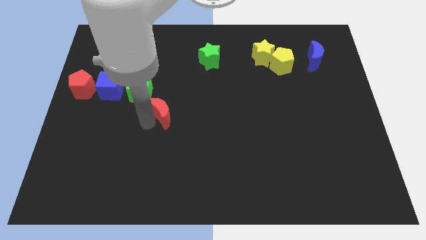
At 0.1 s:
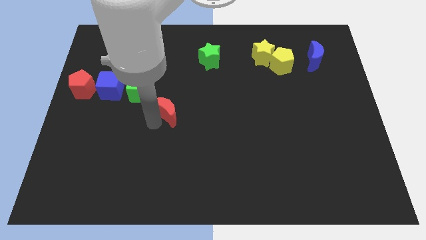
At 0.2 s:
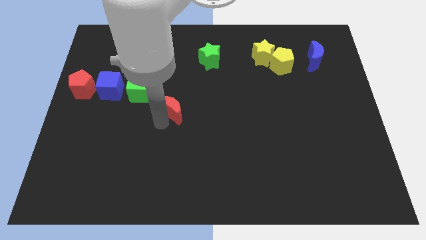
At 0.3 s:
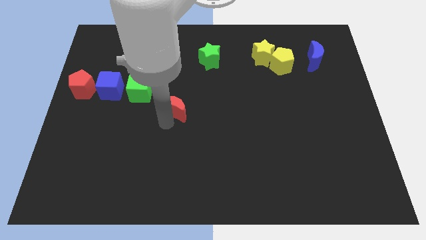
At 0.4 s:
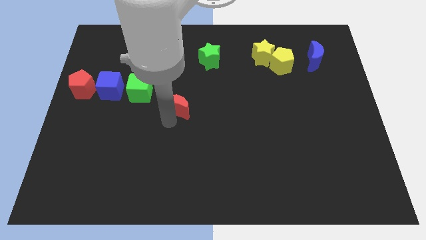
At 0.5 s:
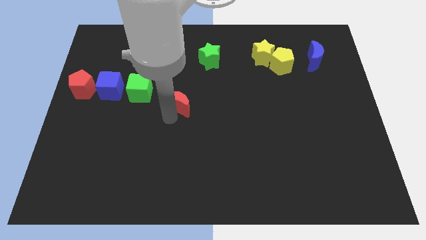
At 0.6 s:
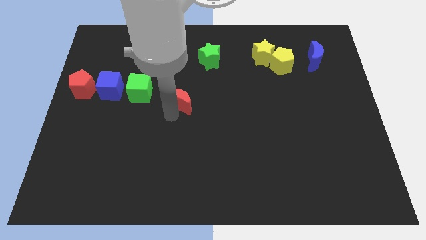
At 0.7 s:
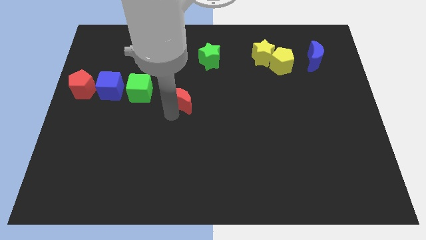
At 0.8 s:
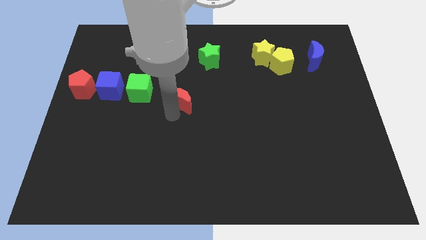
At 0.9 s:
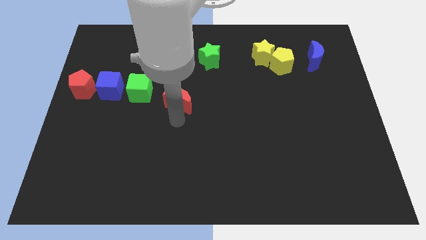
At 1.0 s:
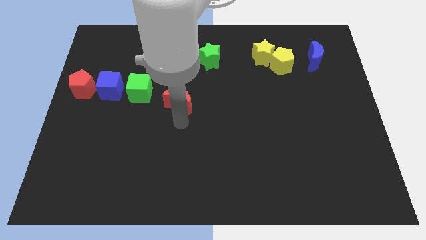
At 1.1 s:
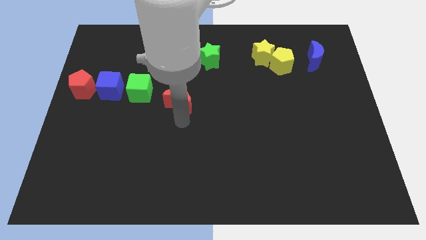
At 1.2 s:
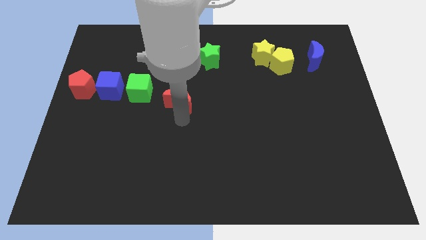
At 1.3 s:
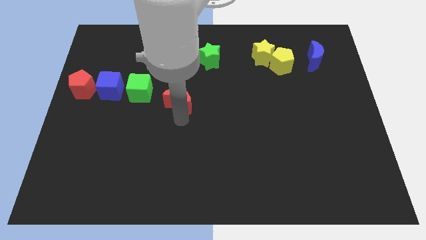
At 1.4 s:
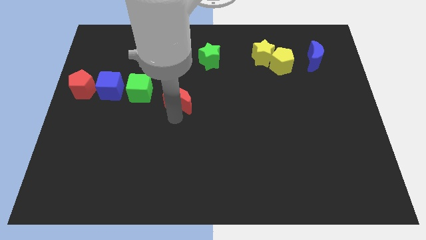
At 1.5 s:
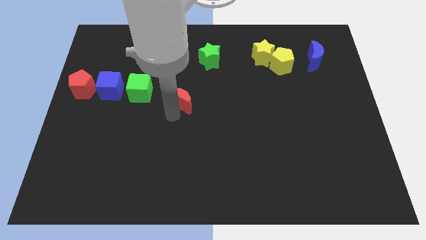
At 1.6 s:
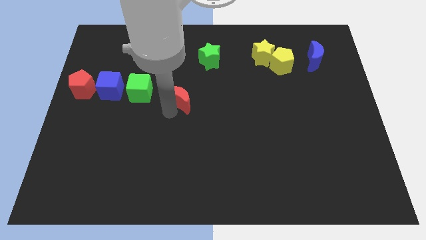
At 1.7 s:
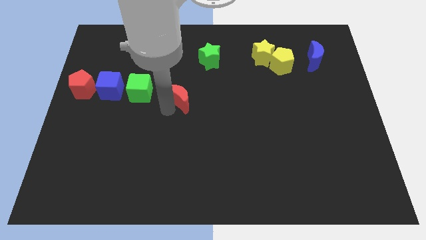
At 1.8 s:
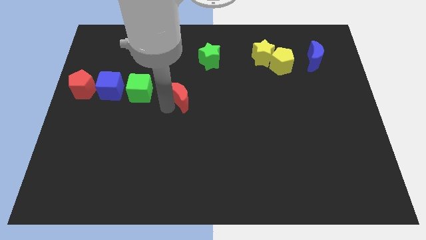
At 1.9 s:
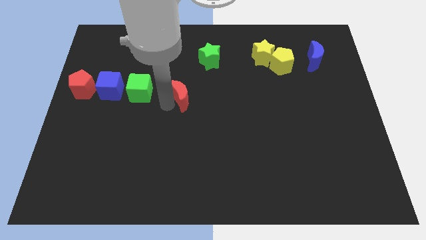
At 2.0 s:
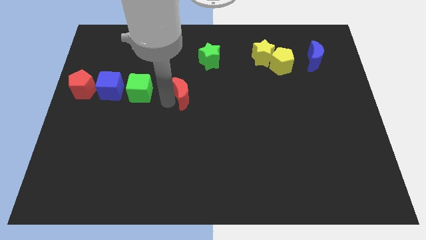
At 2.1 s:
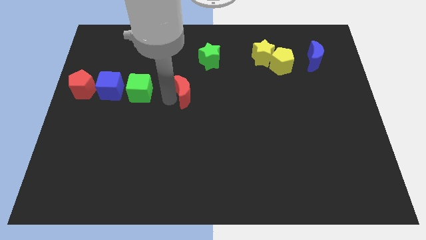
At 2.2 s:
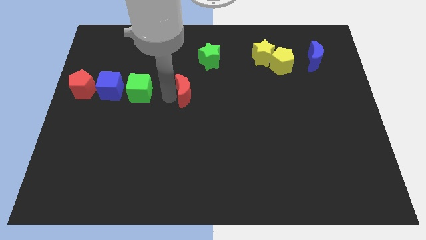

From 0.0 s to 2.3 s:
move red moon slightly to make a parallel line

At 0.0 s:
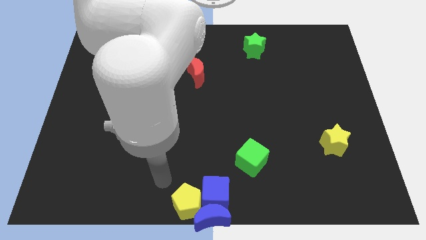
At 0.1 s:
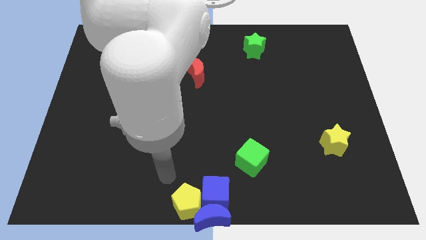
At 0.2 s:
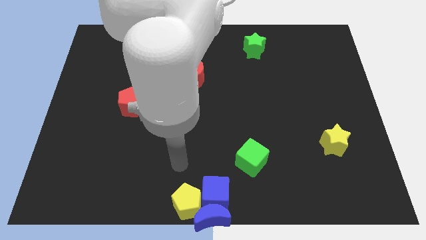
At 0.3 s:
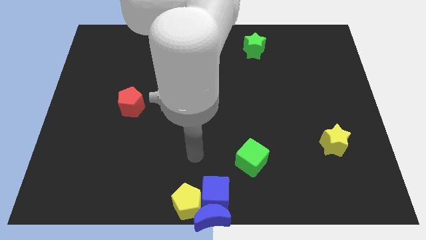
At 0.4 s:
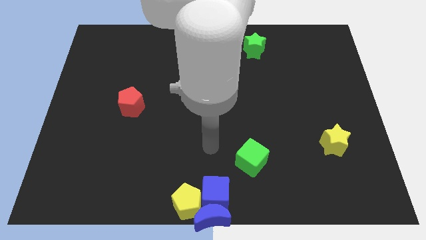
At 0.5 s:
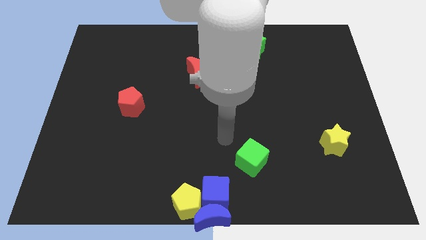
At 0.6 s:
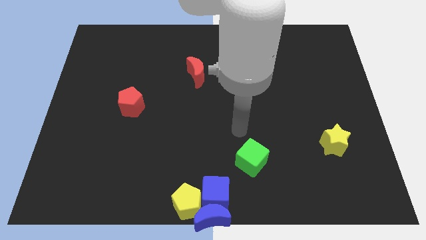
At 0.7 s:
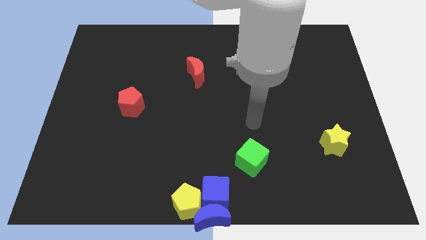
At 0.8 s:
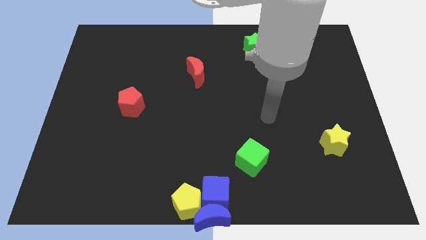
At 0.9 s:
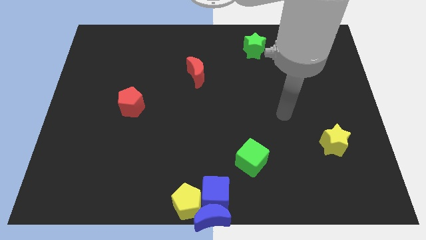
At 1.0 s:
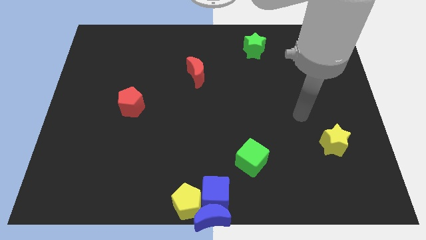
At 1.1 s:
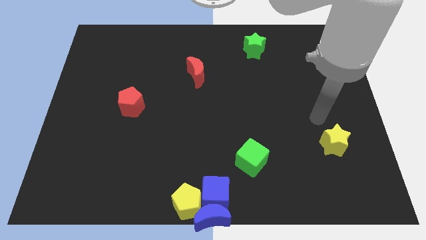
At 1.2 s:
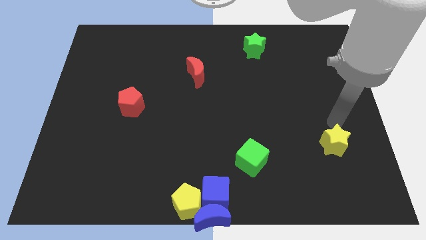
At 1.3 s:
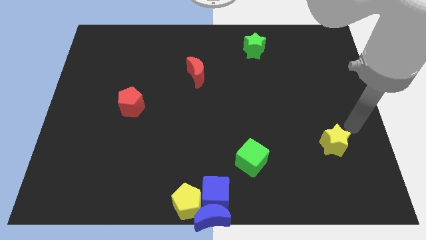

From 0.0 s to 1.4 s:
move your arm to the top of yellow star

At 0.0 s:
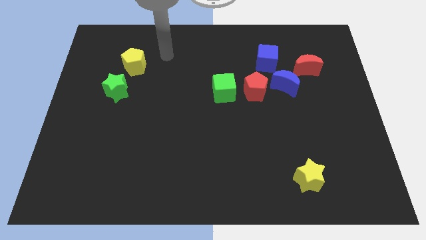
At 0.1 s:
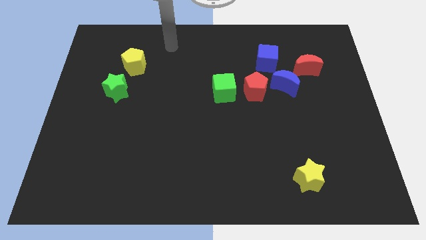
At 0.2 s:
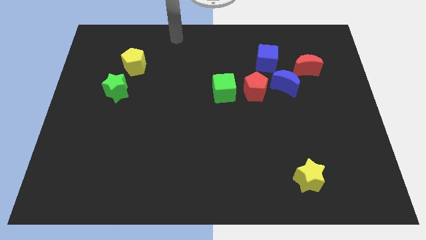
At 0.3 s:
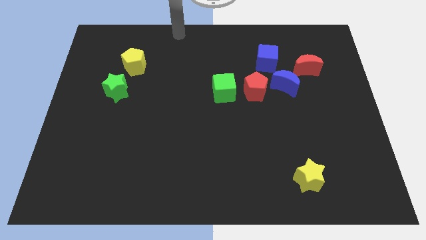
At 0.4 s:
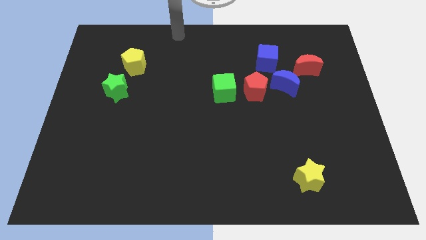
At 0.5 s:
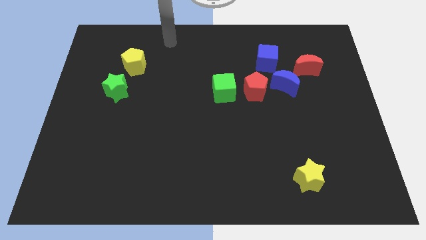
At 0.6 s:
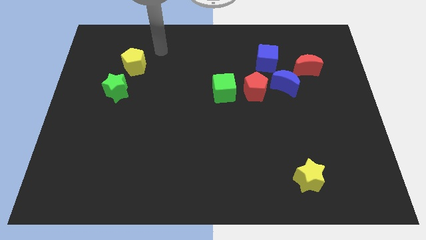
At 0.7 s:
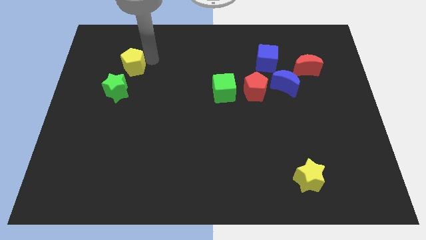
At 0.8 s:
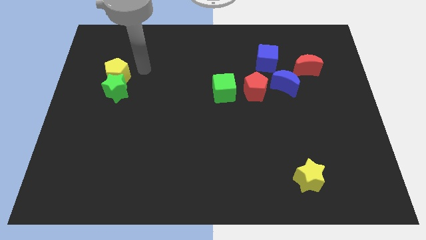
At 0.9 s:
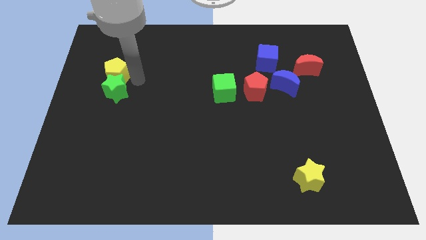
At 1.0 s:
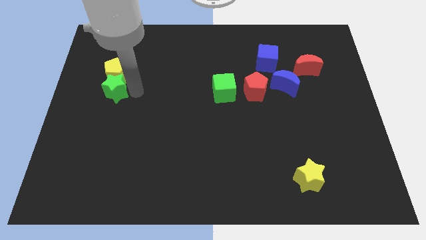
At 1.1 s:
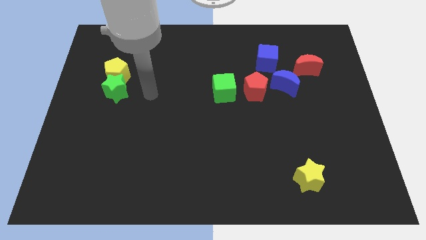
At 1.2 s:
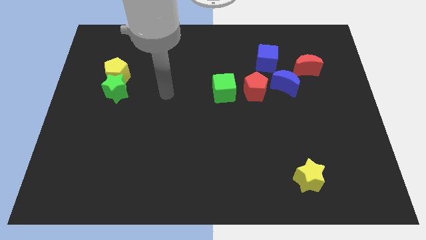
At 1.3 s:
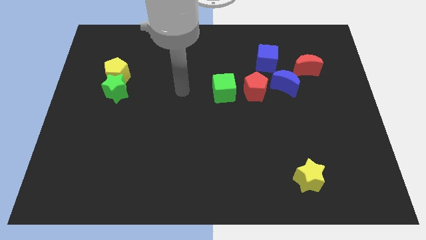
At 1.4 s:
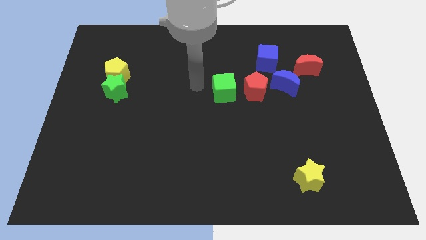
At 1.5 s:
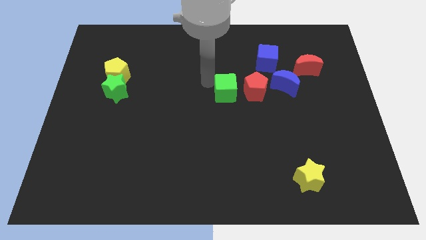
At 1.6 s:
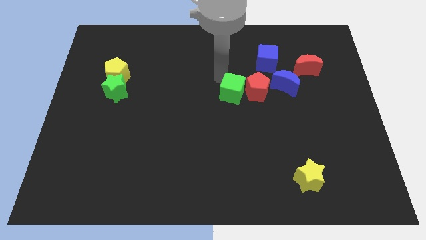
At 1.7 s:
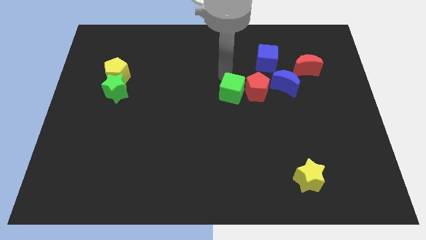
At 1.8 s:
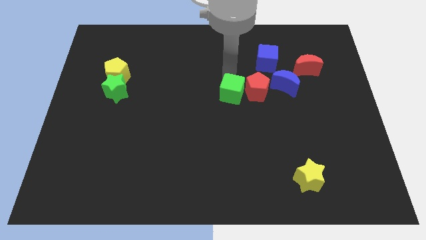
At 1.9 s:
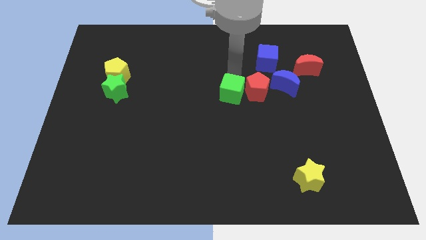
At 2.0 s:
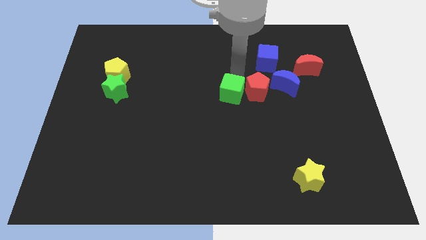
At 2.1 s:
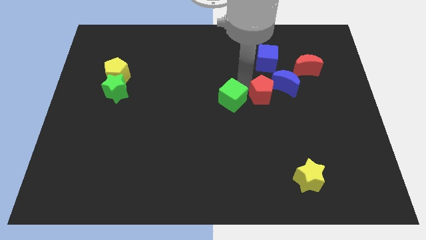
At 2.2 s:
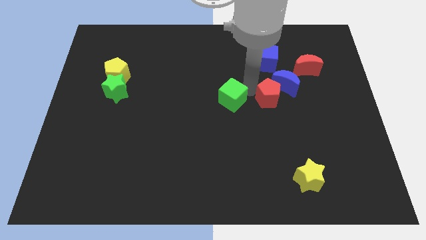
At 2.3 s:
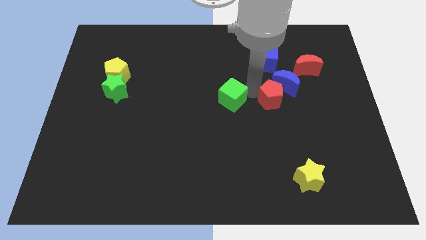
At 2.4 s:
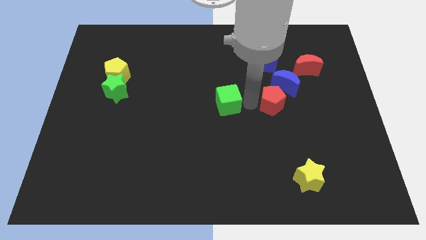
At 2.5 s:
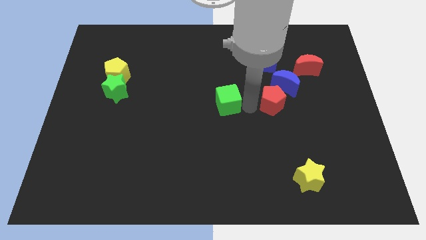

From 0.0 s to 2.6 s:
separate the green cube from red pentagon

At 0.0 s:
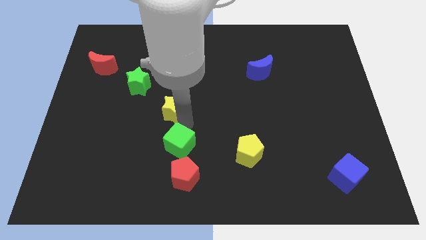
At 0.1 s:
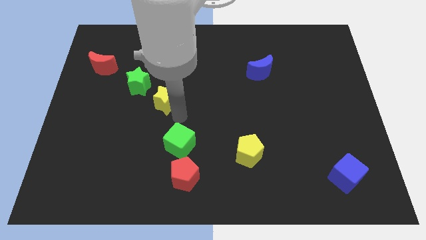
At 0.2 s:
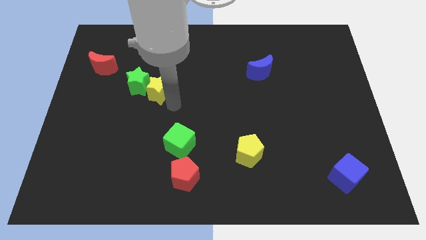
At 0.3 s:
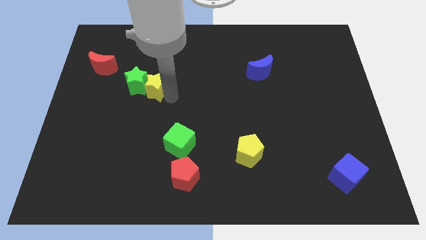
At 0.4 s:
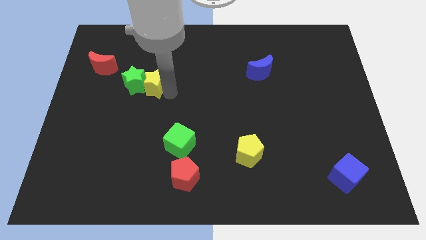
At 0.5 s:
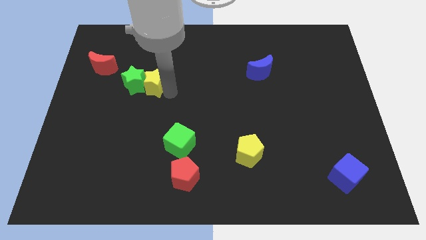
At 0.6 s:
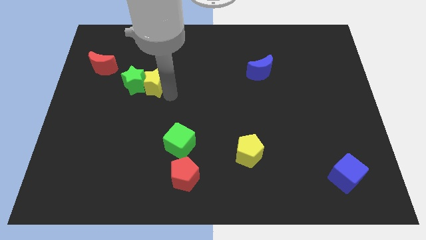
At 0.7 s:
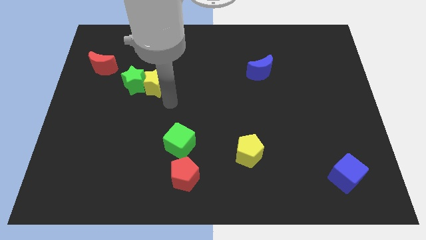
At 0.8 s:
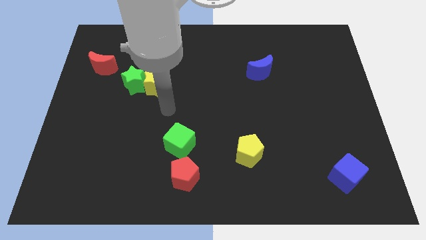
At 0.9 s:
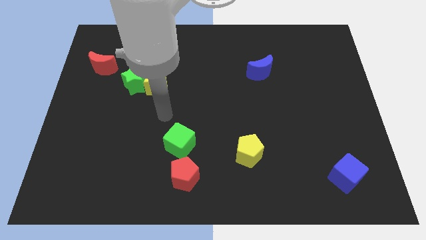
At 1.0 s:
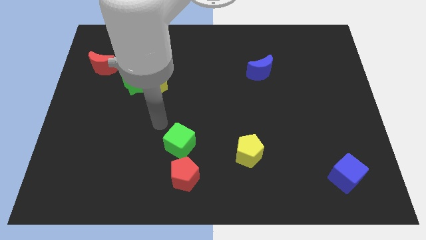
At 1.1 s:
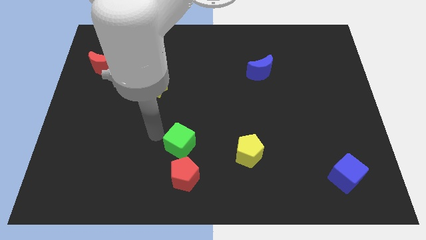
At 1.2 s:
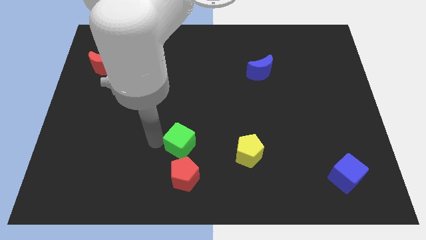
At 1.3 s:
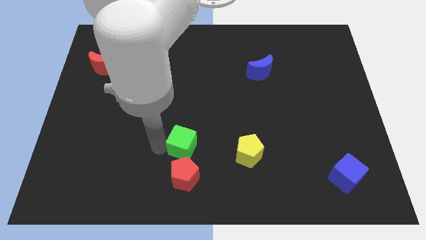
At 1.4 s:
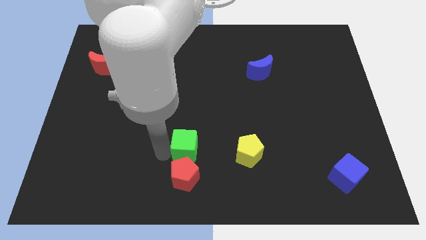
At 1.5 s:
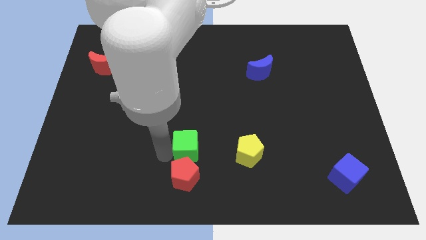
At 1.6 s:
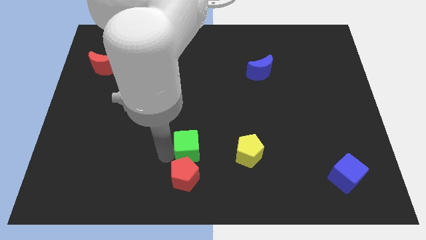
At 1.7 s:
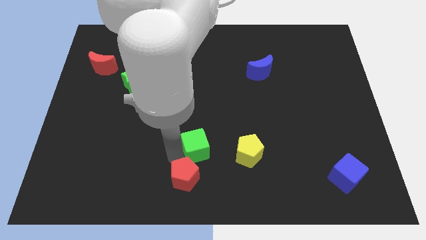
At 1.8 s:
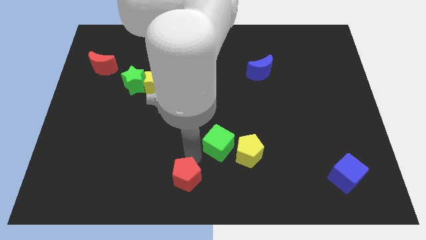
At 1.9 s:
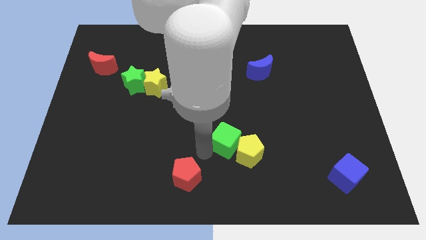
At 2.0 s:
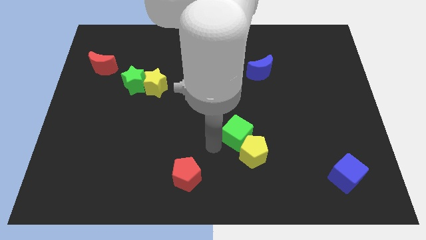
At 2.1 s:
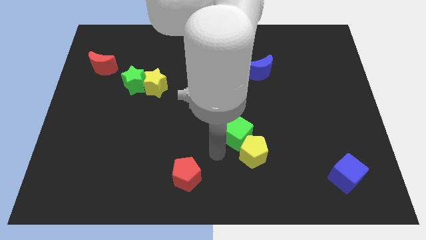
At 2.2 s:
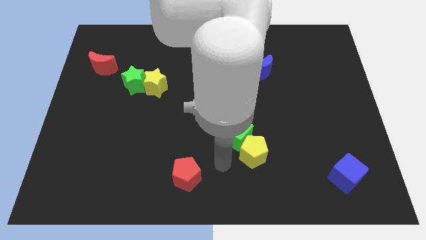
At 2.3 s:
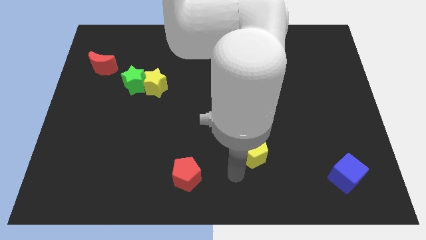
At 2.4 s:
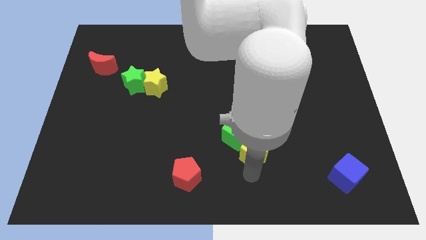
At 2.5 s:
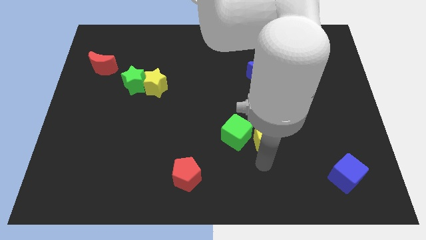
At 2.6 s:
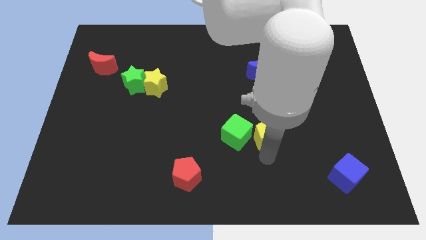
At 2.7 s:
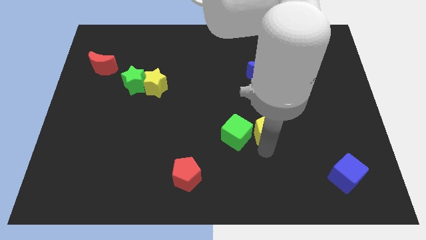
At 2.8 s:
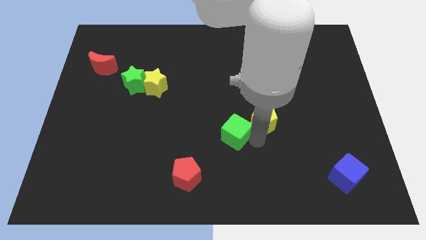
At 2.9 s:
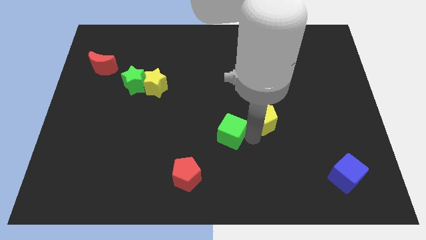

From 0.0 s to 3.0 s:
push green cube in to yellow pentagon
